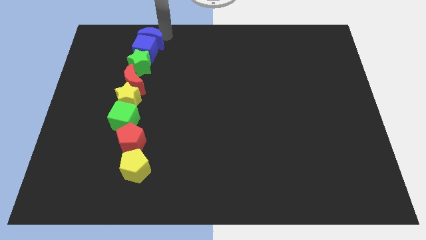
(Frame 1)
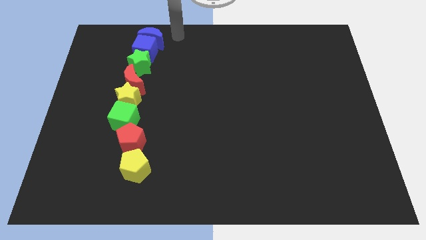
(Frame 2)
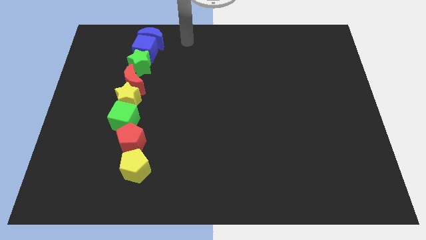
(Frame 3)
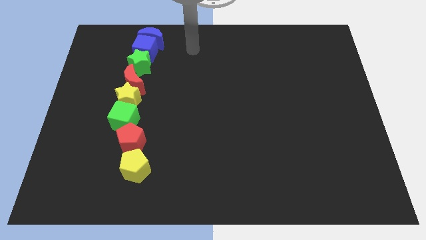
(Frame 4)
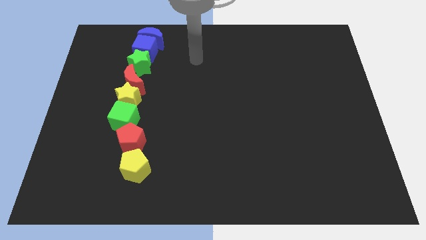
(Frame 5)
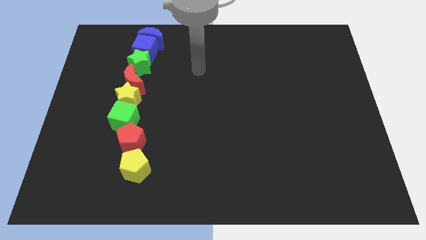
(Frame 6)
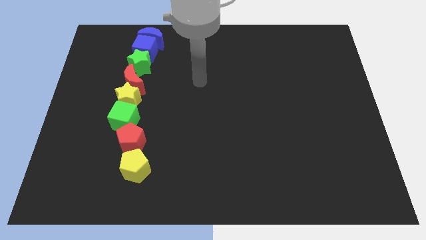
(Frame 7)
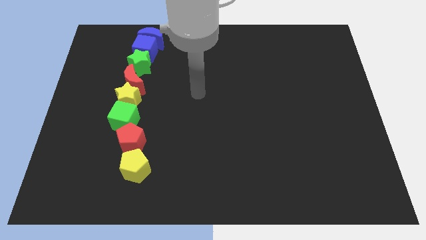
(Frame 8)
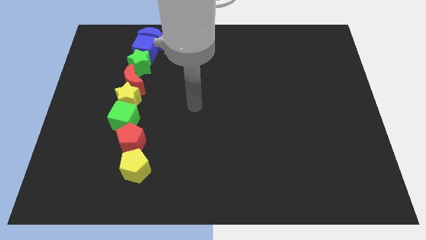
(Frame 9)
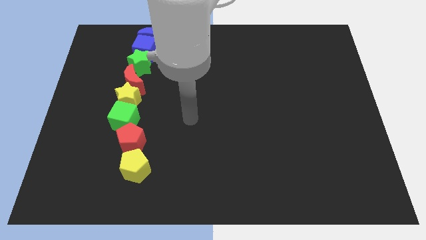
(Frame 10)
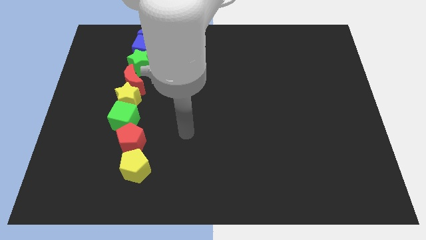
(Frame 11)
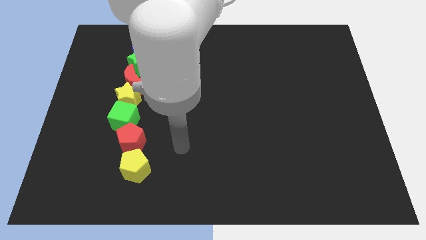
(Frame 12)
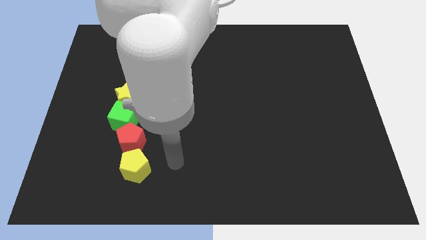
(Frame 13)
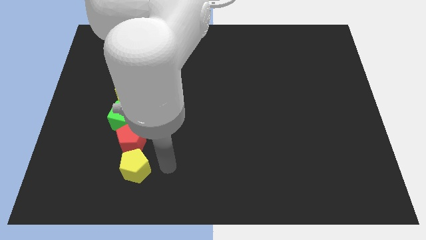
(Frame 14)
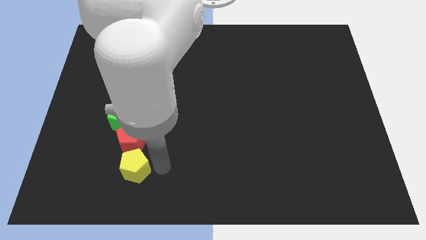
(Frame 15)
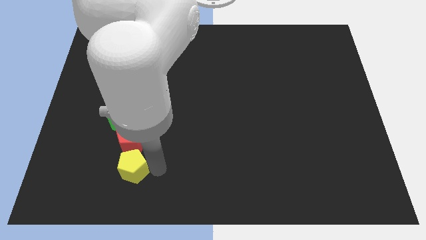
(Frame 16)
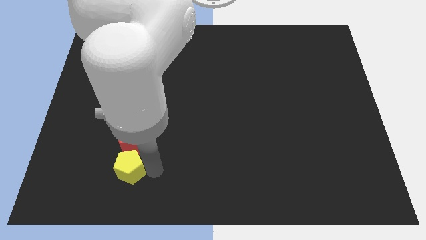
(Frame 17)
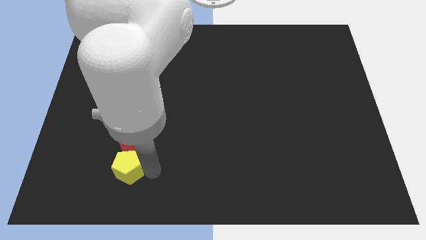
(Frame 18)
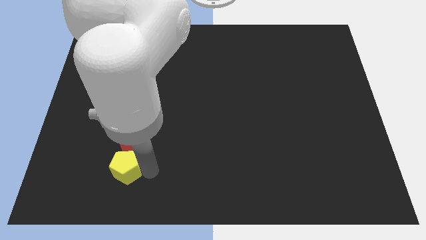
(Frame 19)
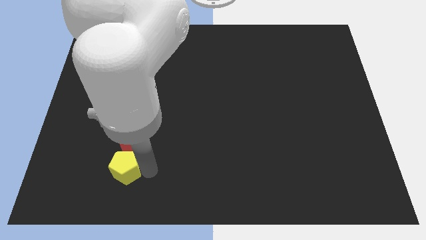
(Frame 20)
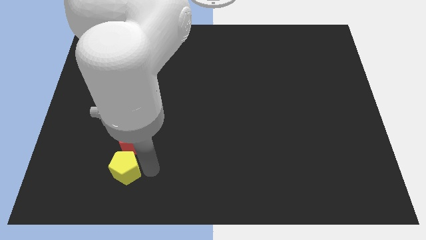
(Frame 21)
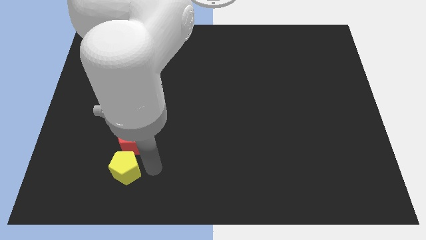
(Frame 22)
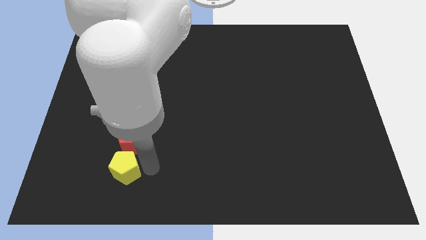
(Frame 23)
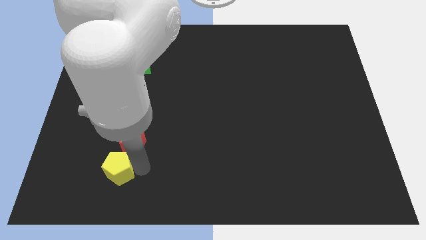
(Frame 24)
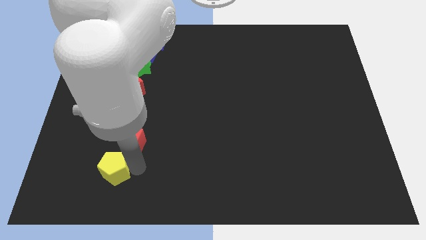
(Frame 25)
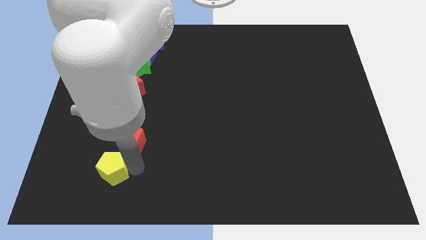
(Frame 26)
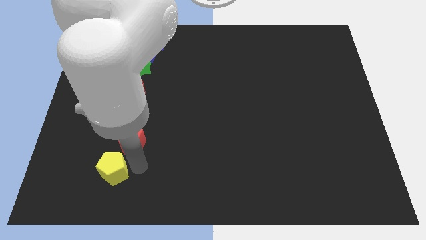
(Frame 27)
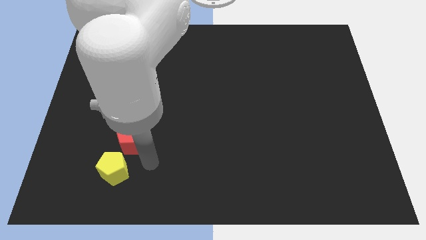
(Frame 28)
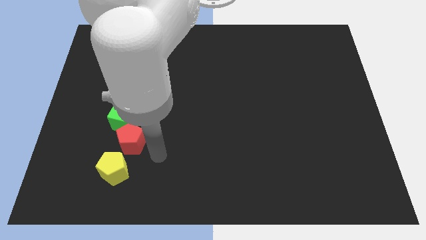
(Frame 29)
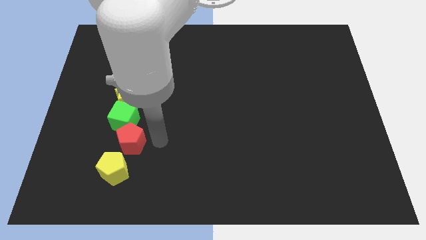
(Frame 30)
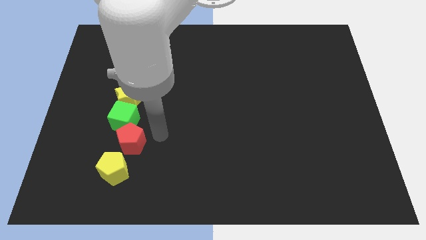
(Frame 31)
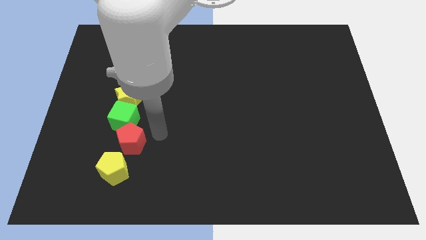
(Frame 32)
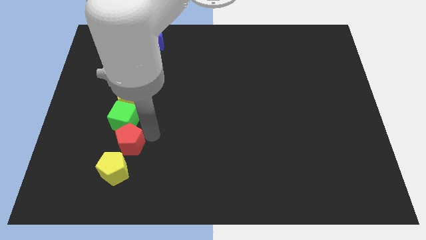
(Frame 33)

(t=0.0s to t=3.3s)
move the yellow pentagon slightly to the left

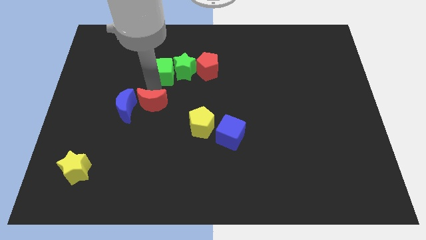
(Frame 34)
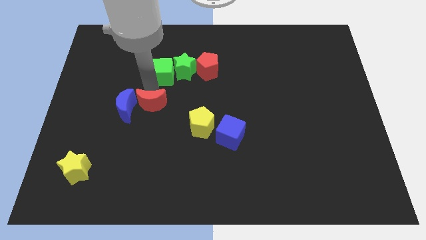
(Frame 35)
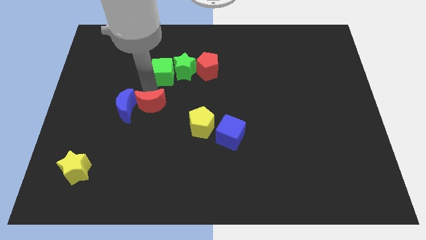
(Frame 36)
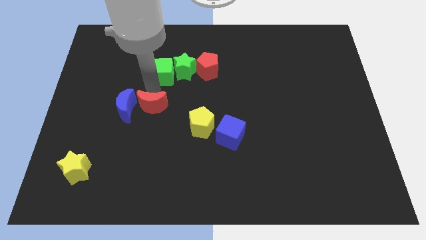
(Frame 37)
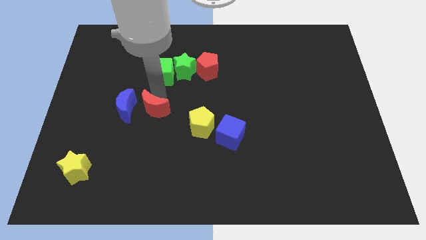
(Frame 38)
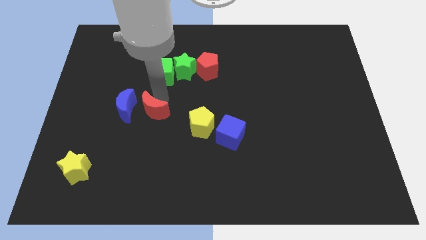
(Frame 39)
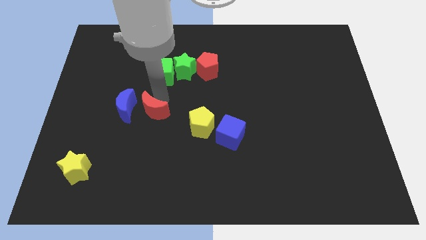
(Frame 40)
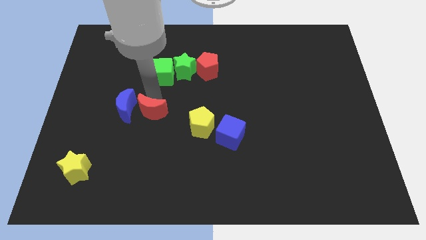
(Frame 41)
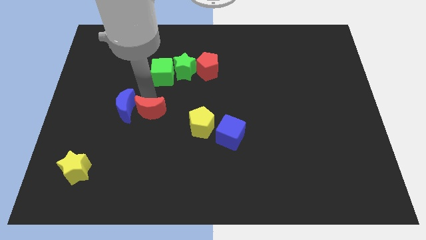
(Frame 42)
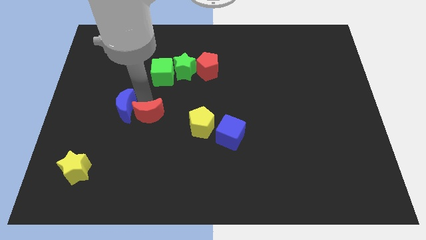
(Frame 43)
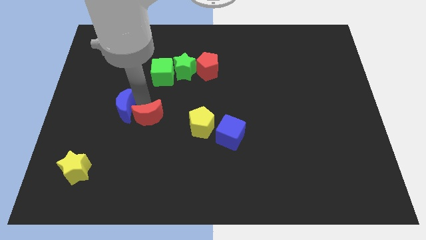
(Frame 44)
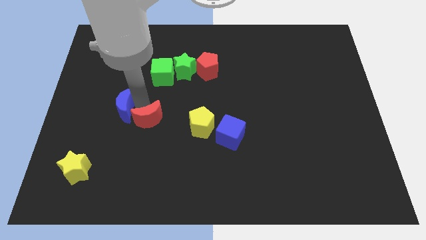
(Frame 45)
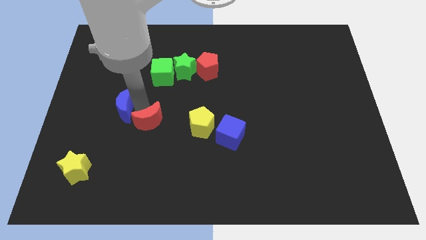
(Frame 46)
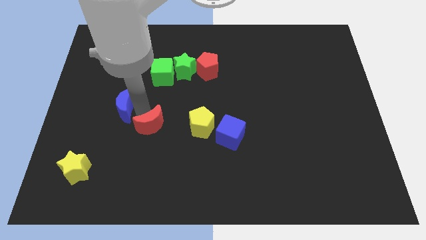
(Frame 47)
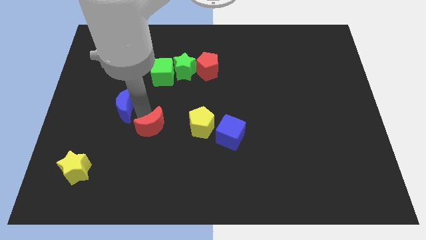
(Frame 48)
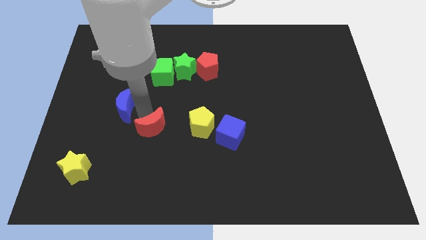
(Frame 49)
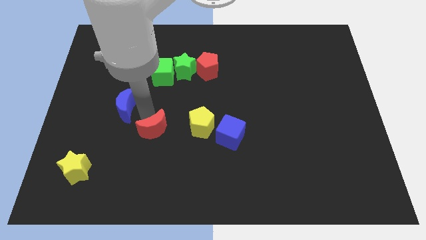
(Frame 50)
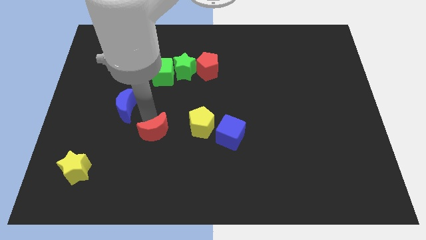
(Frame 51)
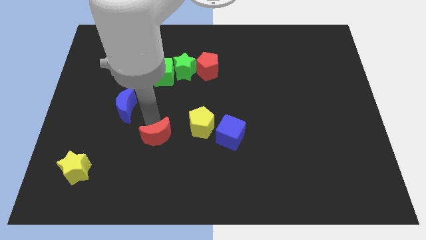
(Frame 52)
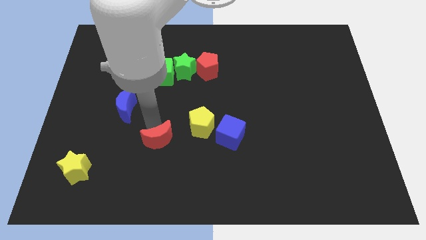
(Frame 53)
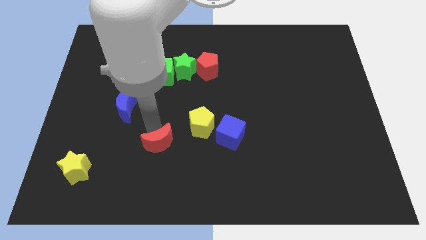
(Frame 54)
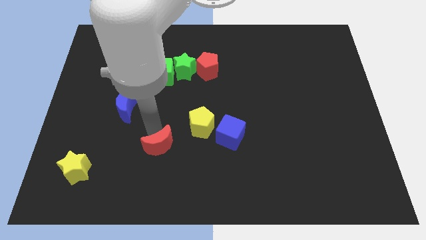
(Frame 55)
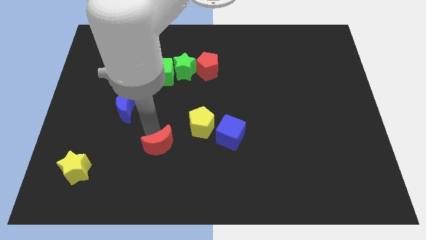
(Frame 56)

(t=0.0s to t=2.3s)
push the red crescent towards the bottom

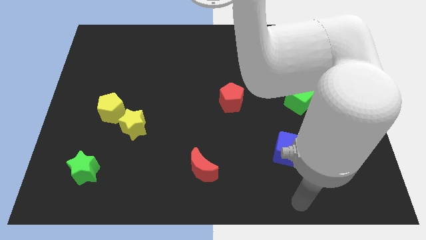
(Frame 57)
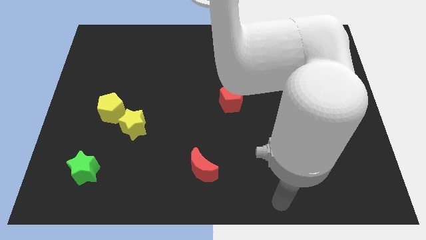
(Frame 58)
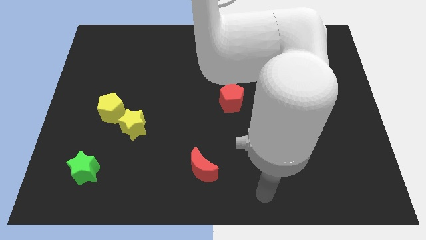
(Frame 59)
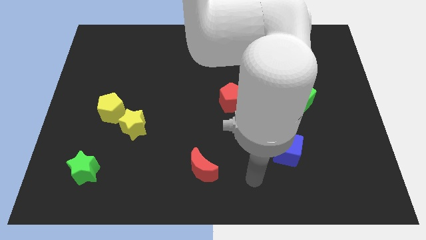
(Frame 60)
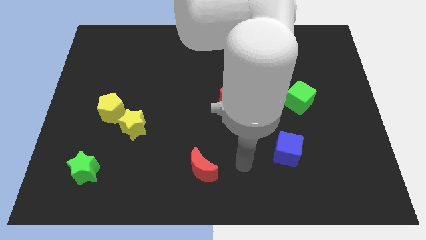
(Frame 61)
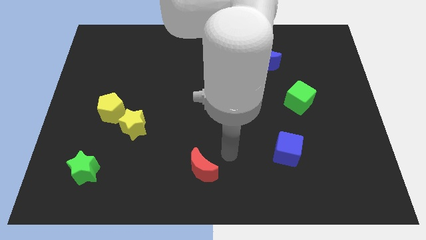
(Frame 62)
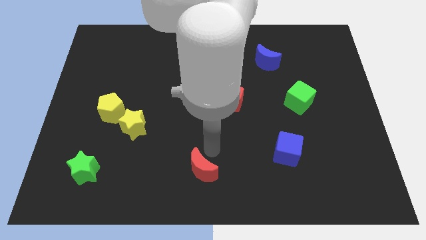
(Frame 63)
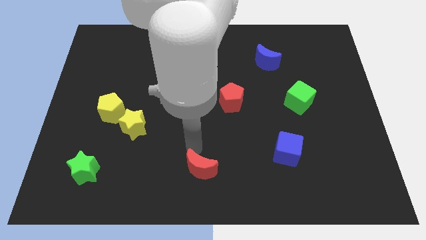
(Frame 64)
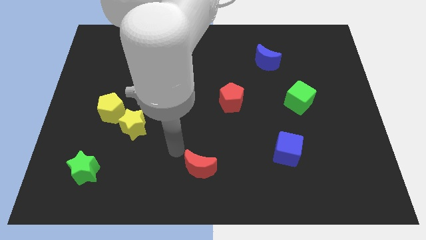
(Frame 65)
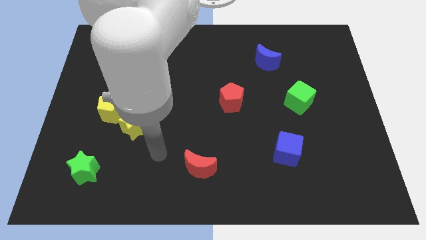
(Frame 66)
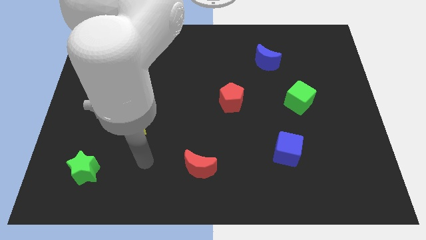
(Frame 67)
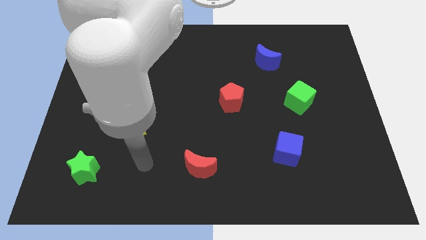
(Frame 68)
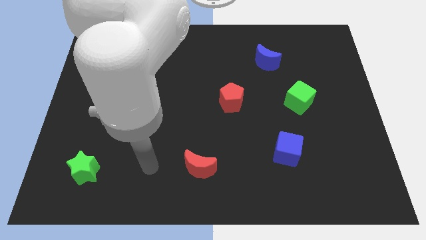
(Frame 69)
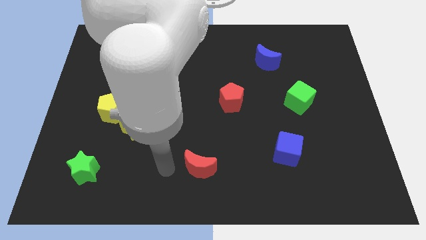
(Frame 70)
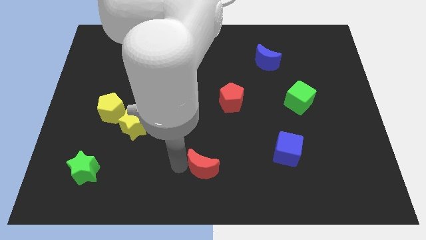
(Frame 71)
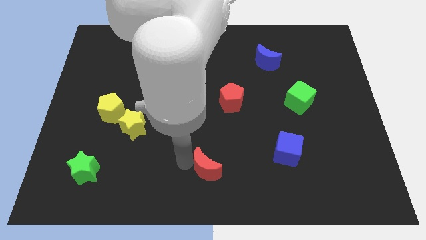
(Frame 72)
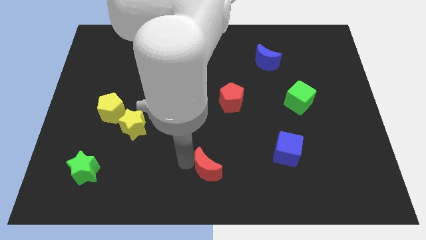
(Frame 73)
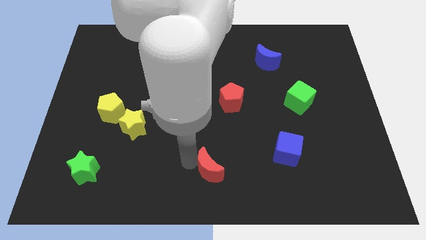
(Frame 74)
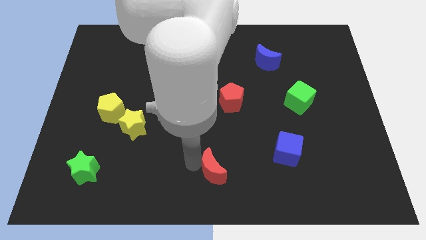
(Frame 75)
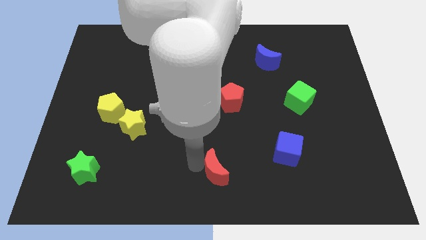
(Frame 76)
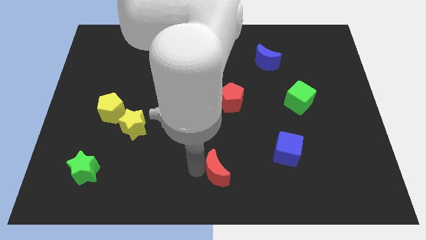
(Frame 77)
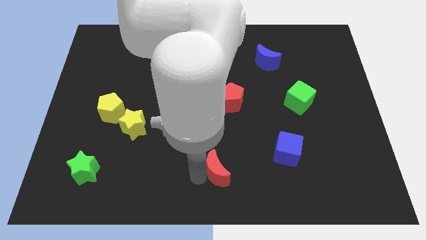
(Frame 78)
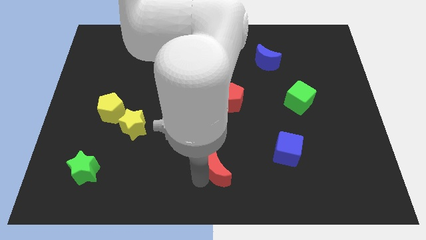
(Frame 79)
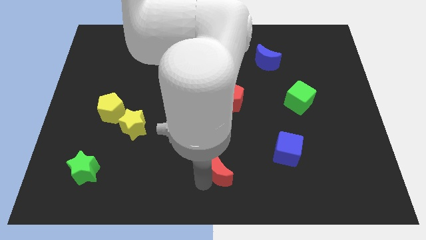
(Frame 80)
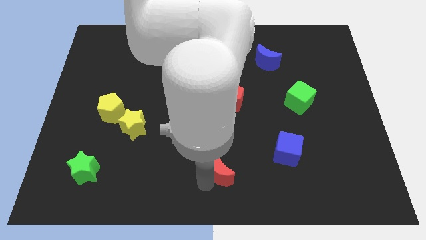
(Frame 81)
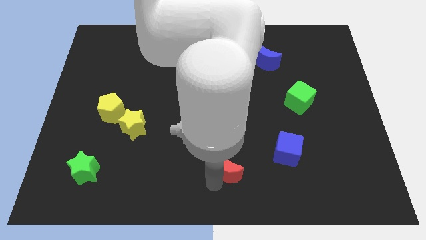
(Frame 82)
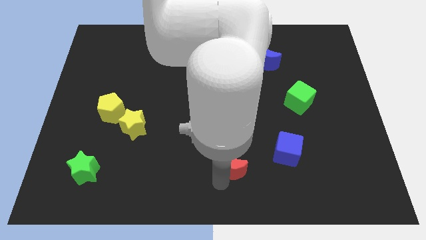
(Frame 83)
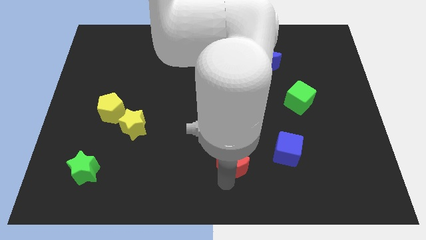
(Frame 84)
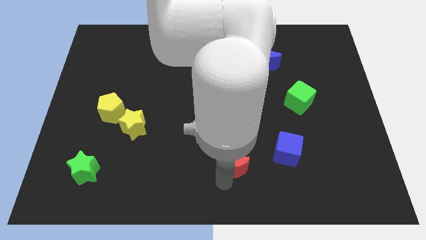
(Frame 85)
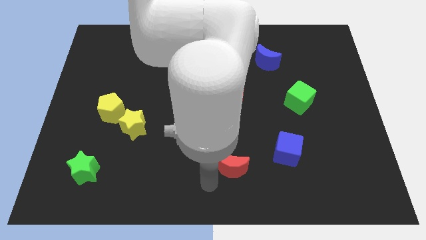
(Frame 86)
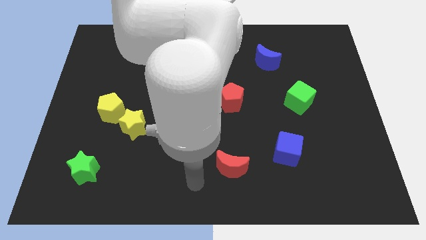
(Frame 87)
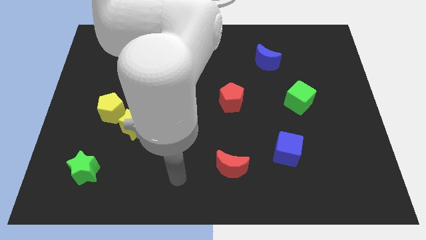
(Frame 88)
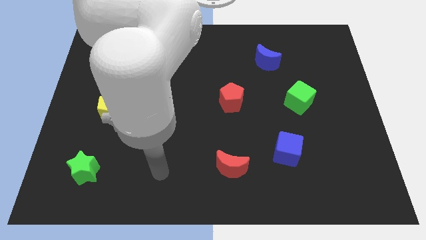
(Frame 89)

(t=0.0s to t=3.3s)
move the red crescent towards the blue cube
